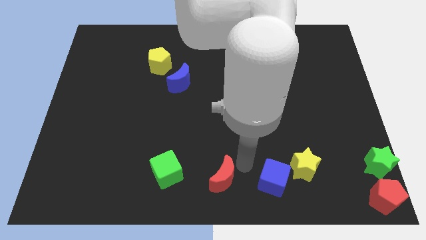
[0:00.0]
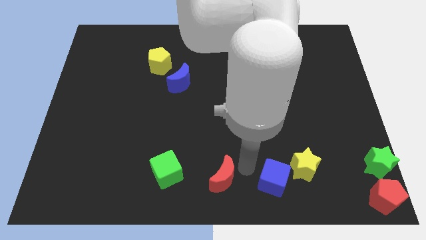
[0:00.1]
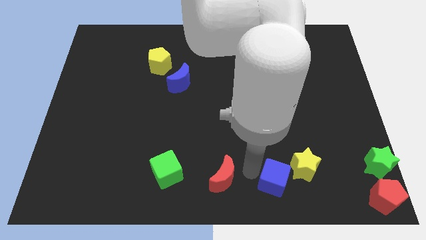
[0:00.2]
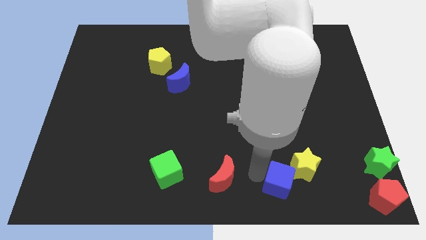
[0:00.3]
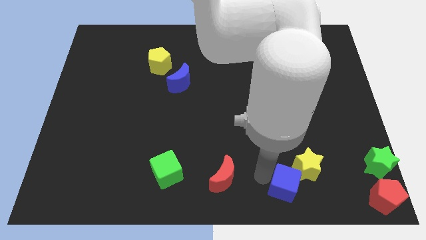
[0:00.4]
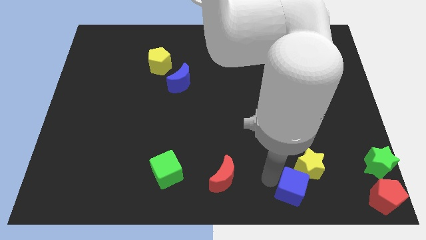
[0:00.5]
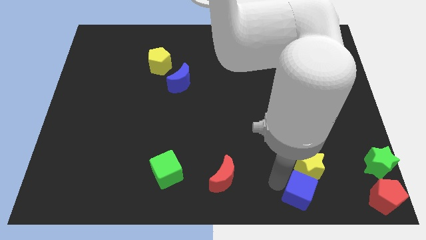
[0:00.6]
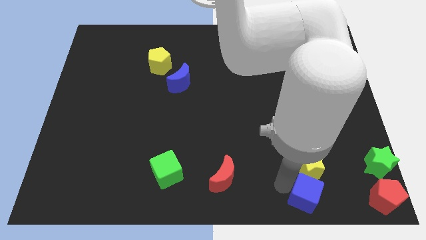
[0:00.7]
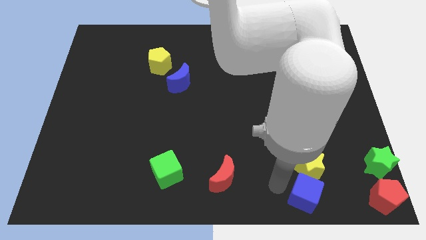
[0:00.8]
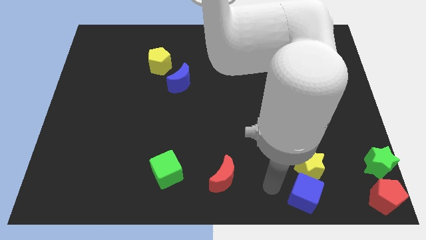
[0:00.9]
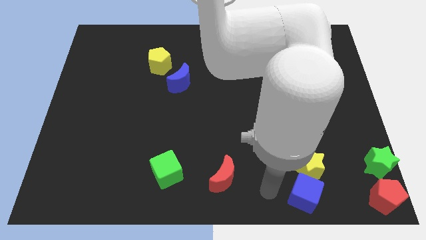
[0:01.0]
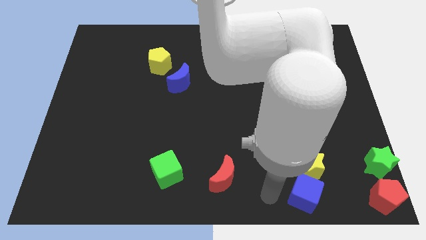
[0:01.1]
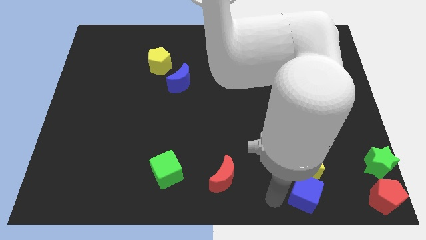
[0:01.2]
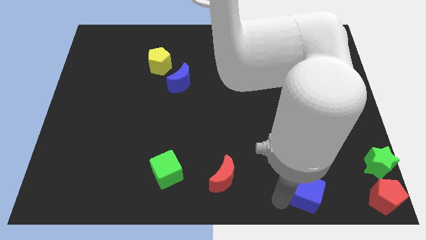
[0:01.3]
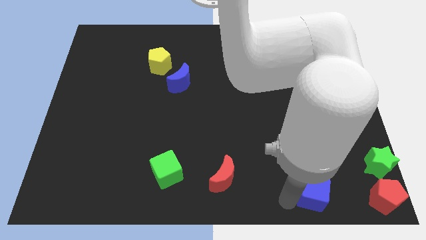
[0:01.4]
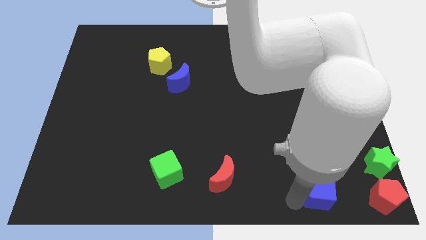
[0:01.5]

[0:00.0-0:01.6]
move the blue cube down to the yellow star

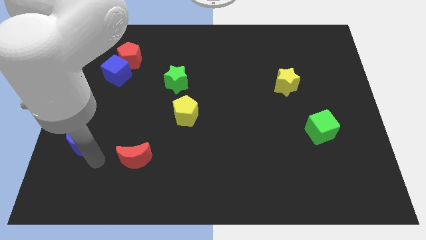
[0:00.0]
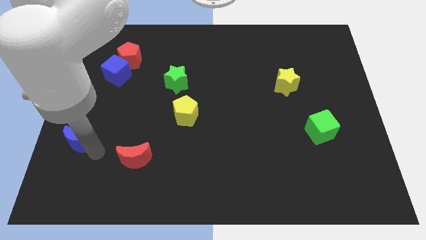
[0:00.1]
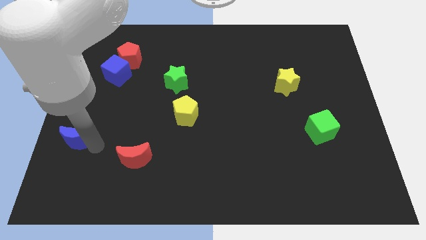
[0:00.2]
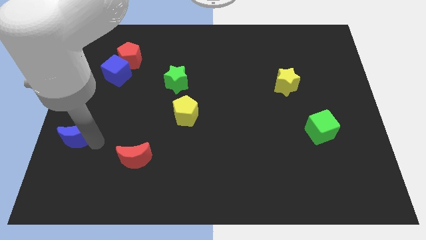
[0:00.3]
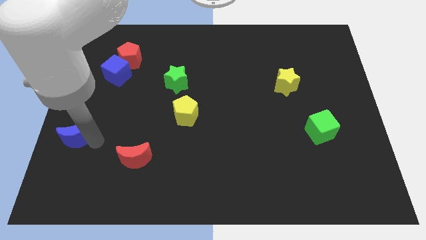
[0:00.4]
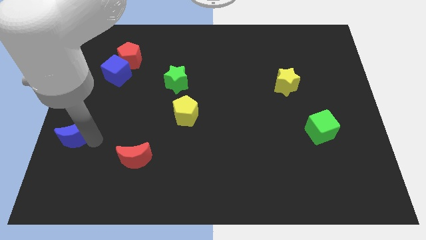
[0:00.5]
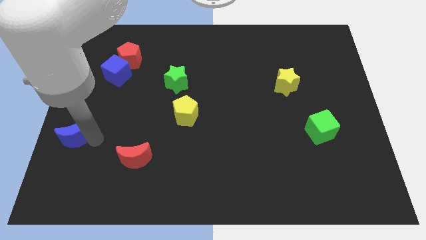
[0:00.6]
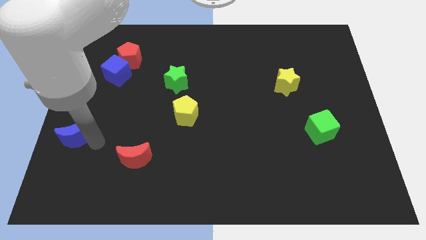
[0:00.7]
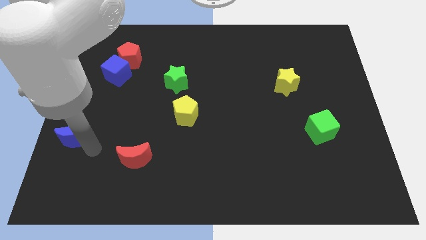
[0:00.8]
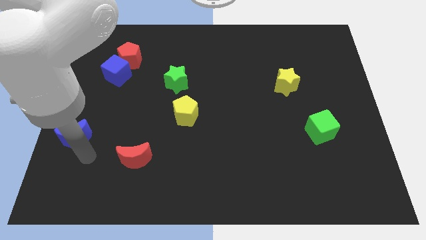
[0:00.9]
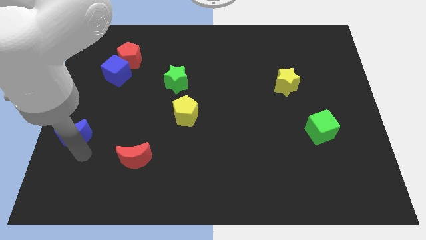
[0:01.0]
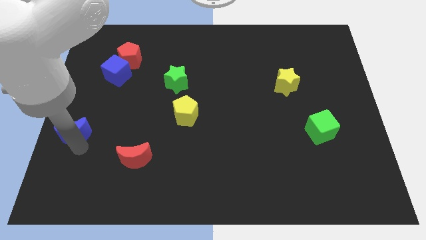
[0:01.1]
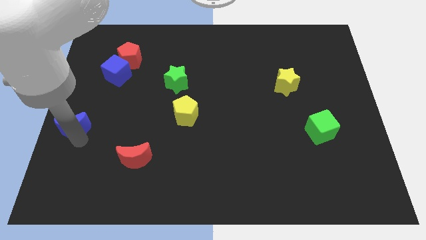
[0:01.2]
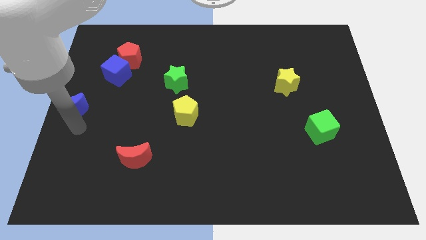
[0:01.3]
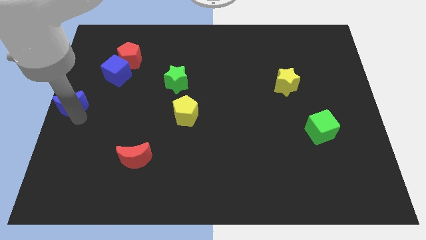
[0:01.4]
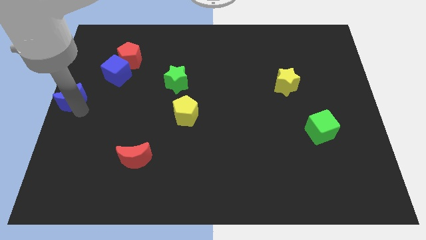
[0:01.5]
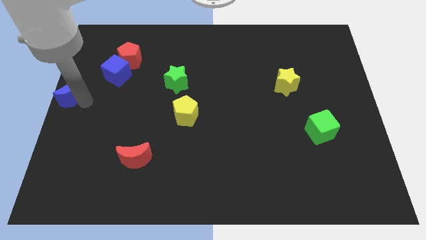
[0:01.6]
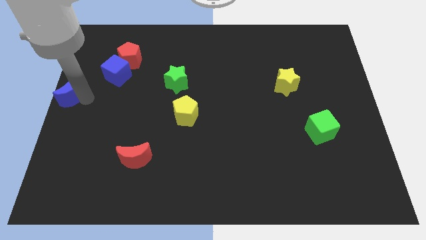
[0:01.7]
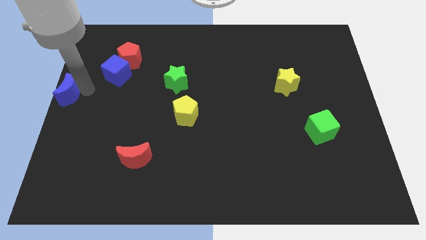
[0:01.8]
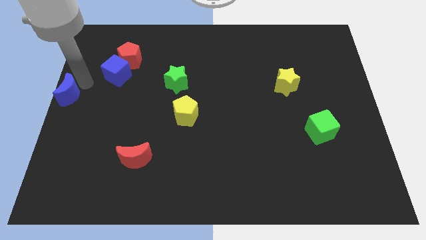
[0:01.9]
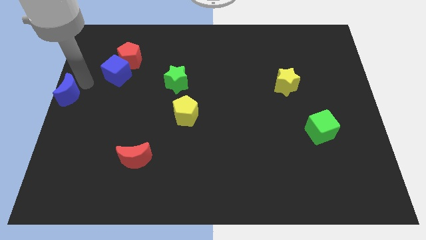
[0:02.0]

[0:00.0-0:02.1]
place the blue moon to the center left of the board

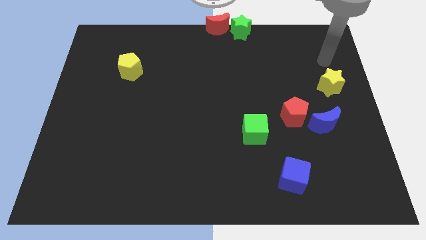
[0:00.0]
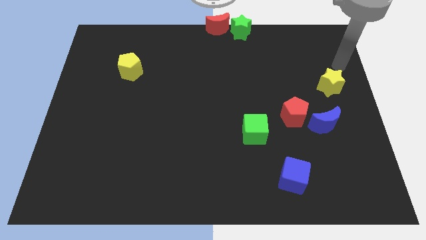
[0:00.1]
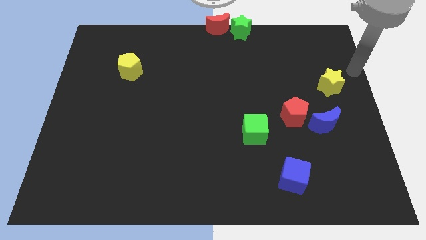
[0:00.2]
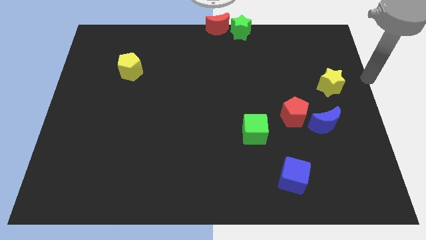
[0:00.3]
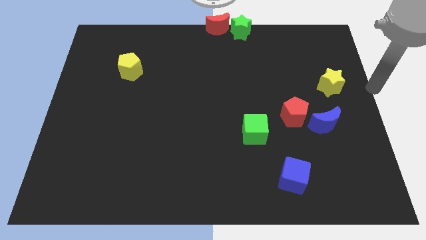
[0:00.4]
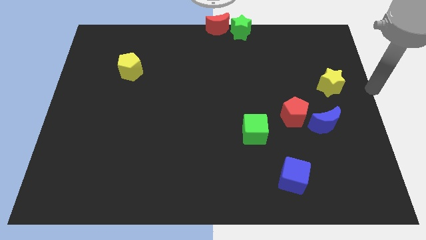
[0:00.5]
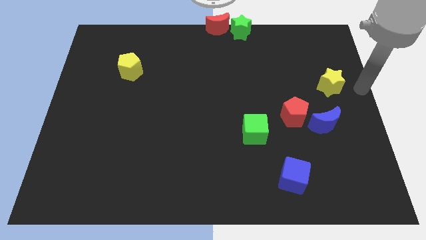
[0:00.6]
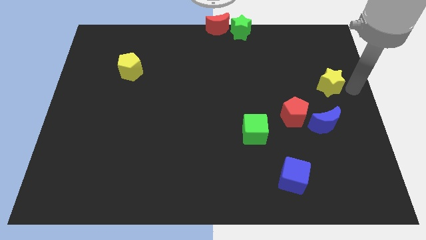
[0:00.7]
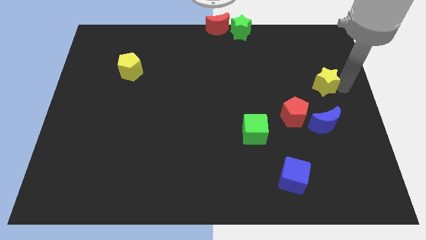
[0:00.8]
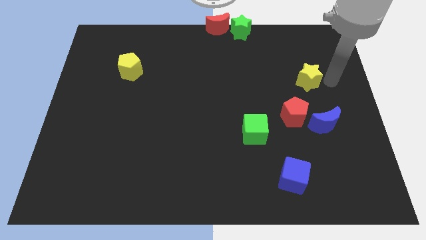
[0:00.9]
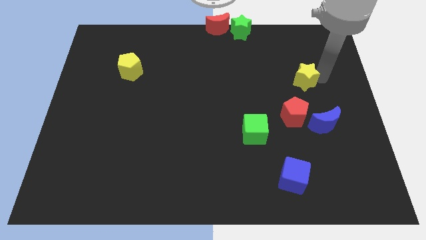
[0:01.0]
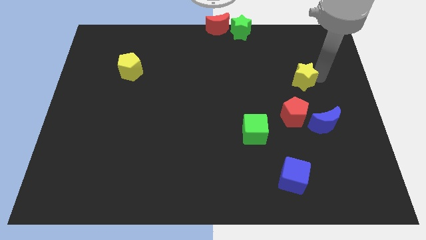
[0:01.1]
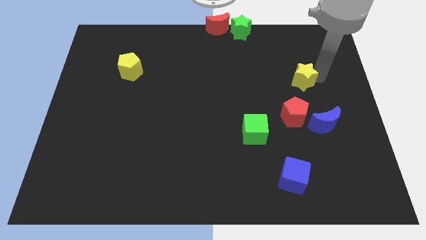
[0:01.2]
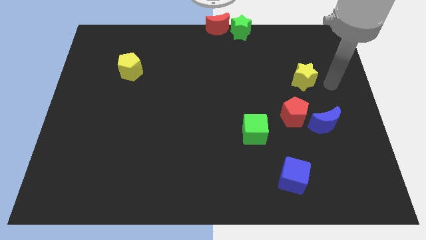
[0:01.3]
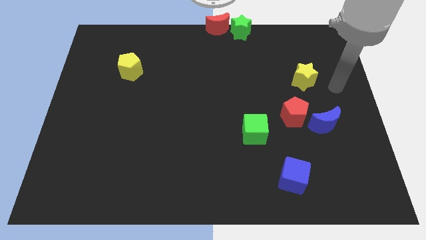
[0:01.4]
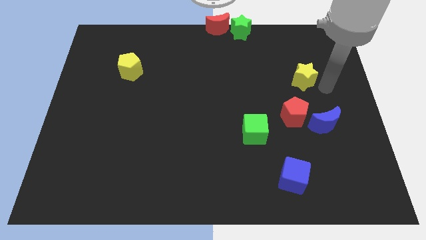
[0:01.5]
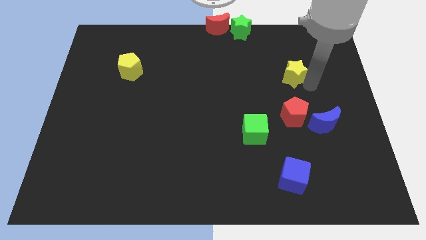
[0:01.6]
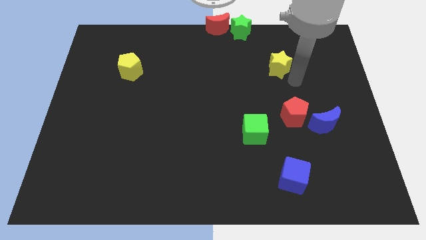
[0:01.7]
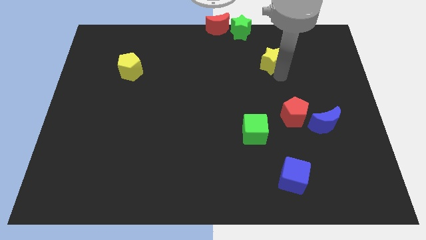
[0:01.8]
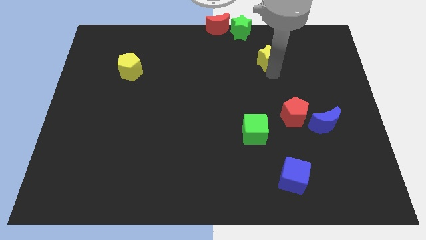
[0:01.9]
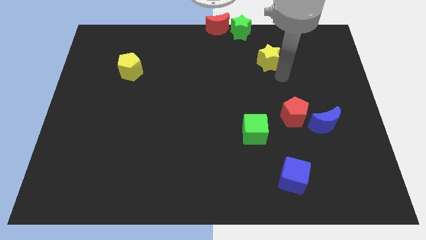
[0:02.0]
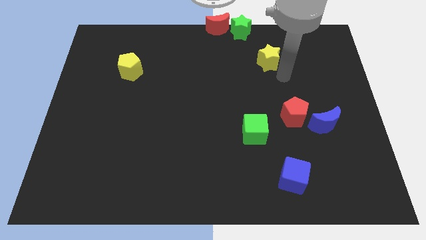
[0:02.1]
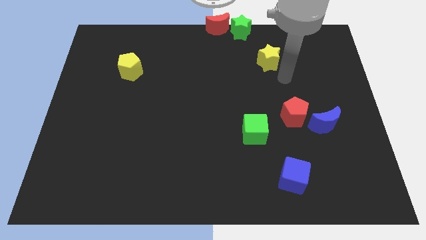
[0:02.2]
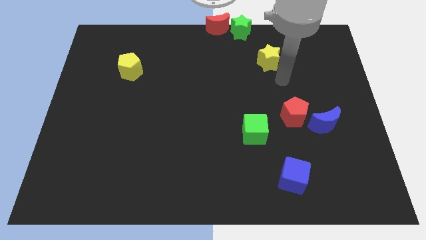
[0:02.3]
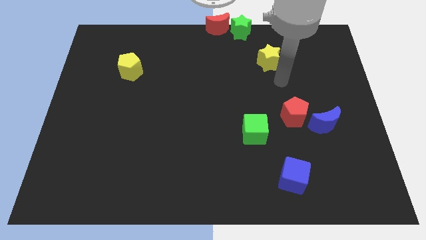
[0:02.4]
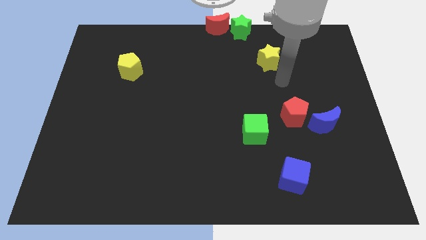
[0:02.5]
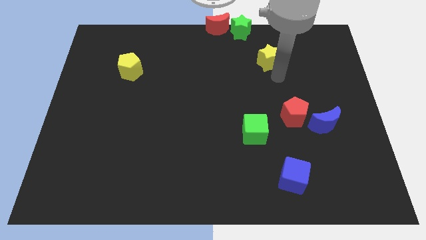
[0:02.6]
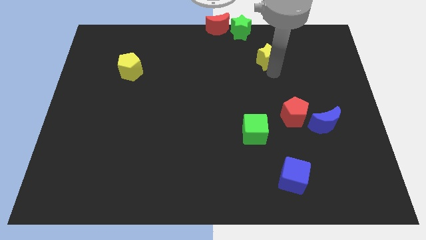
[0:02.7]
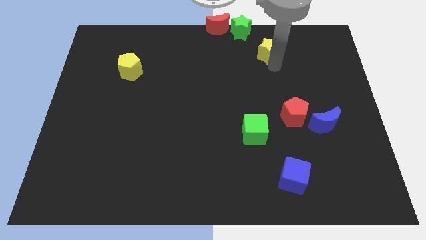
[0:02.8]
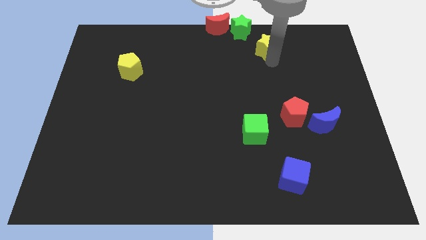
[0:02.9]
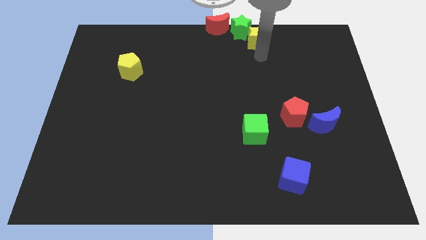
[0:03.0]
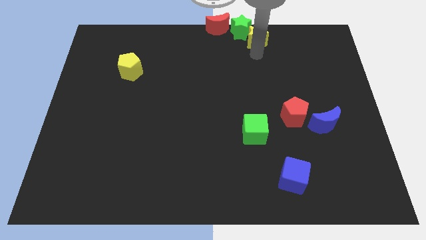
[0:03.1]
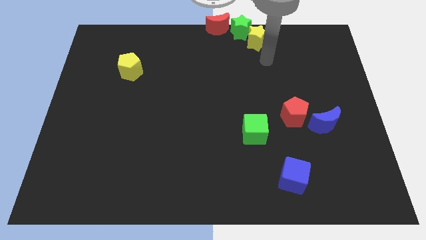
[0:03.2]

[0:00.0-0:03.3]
push the yellow star to the bottom right of the green star

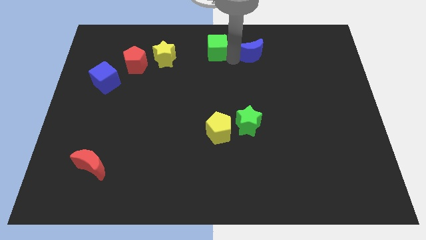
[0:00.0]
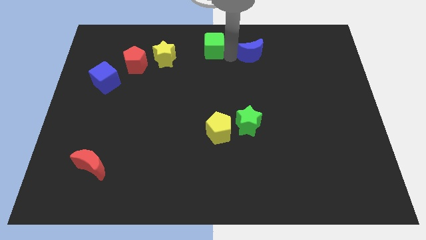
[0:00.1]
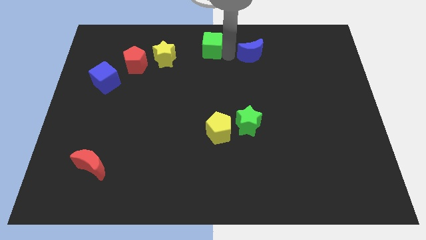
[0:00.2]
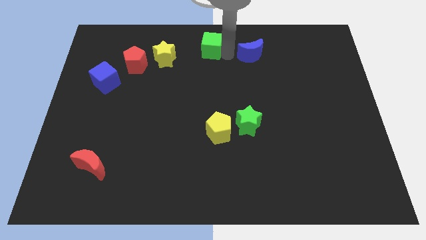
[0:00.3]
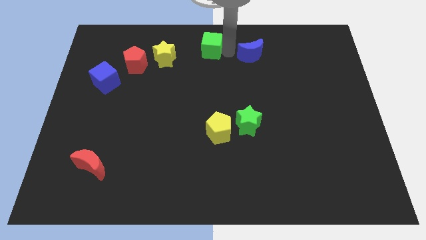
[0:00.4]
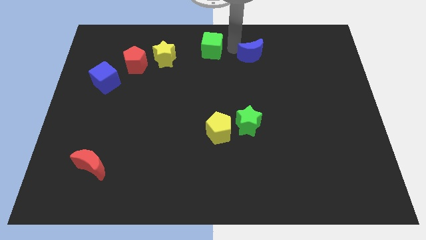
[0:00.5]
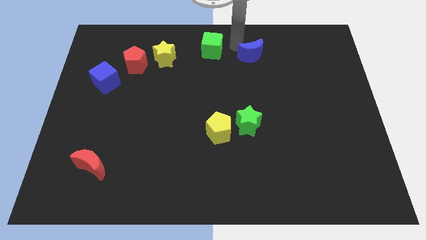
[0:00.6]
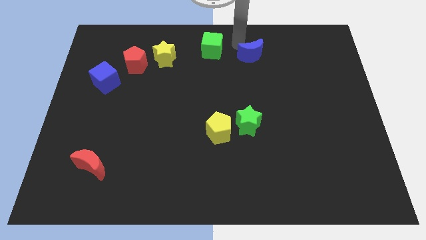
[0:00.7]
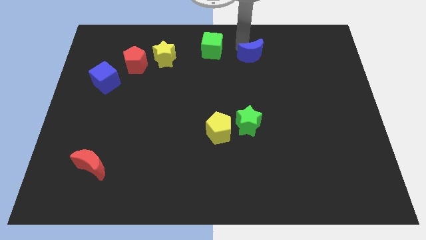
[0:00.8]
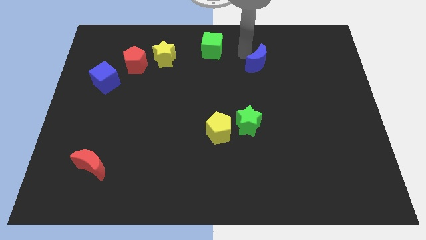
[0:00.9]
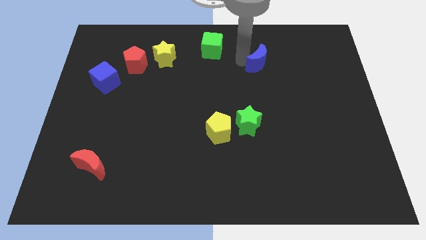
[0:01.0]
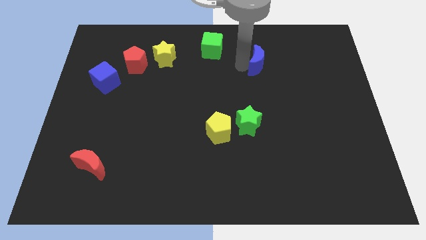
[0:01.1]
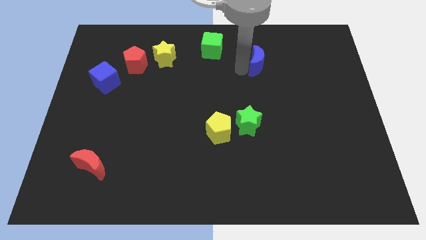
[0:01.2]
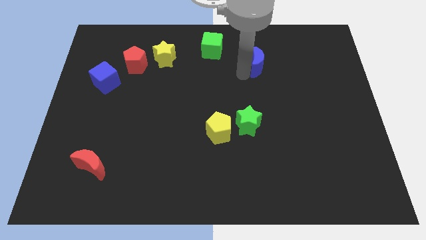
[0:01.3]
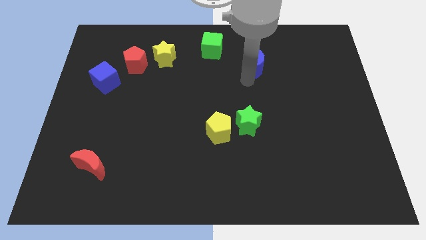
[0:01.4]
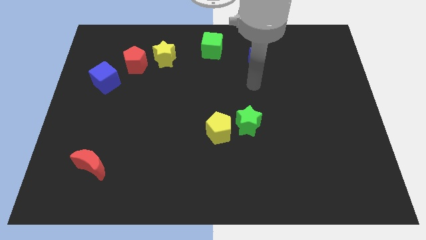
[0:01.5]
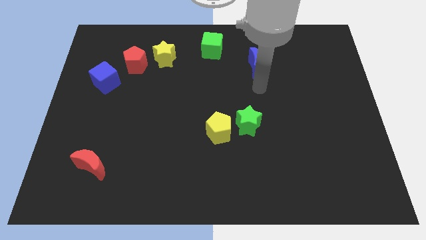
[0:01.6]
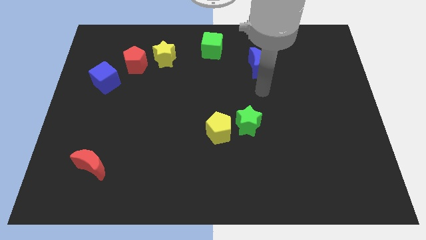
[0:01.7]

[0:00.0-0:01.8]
push green cube and the blue moon diagonal to each other

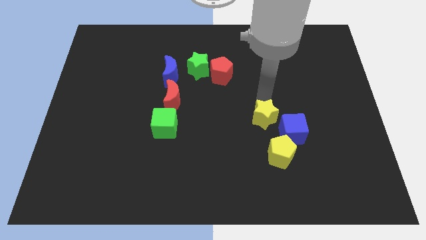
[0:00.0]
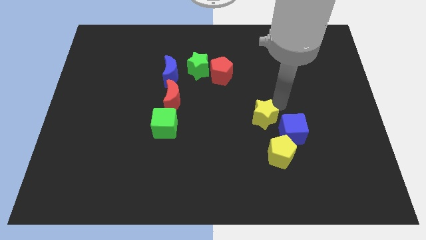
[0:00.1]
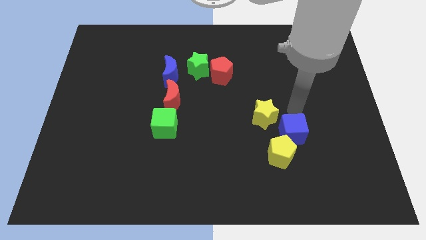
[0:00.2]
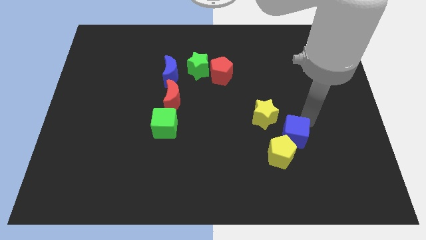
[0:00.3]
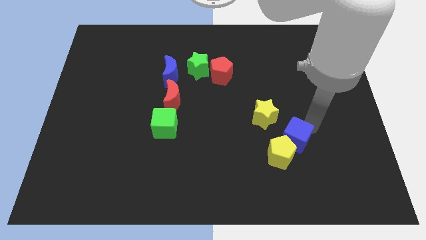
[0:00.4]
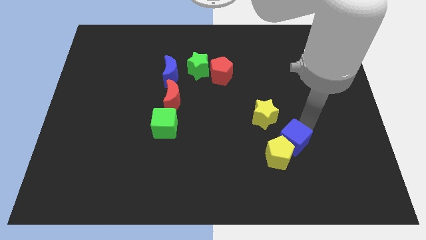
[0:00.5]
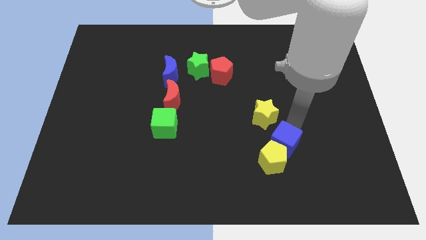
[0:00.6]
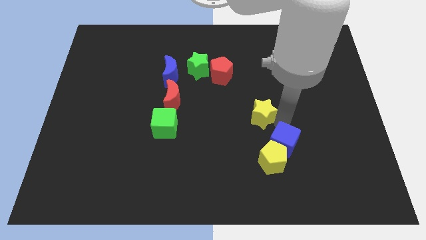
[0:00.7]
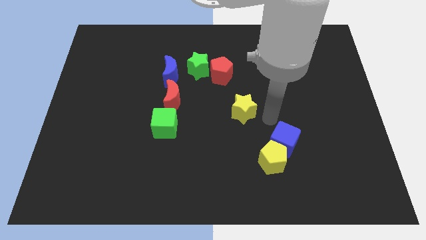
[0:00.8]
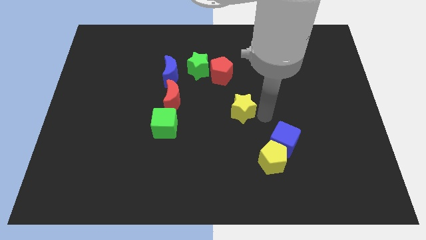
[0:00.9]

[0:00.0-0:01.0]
push the blue cube into the yellow pentagon
